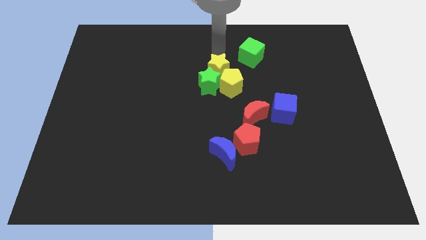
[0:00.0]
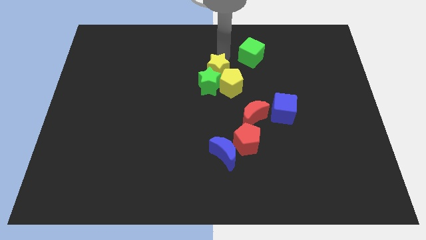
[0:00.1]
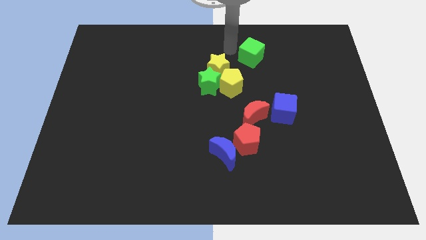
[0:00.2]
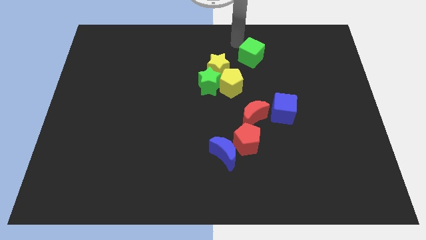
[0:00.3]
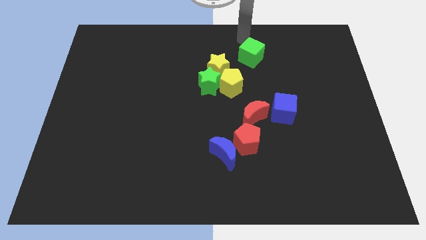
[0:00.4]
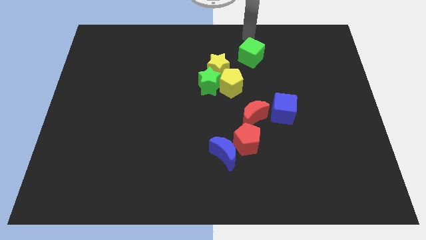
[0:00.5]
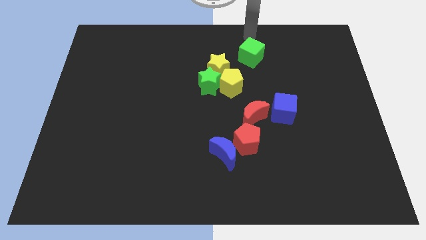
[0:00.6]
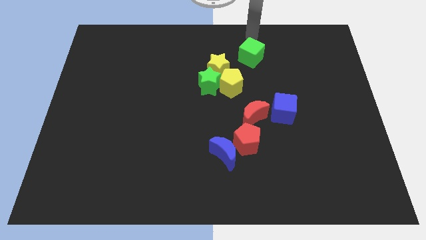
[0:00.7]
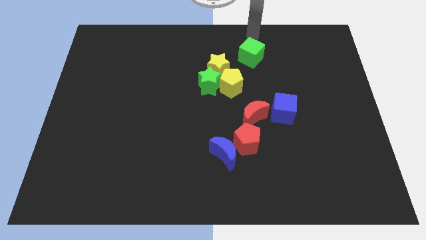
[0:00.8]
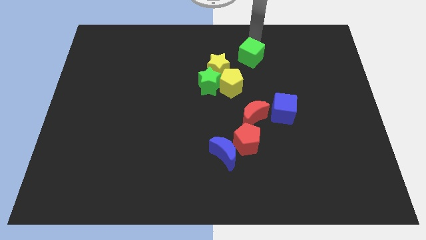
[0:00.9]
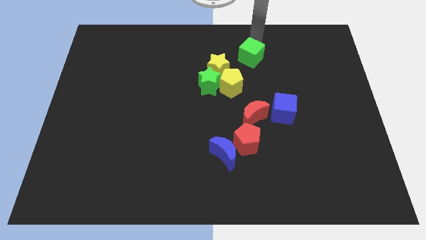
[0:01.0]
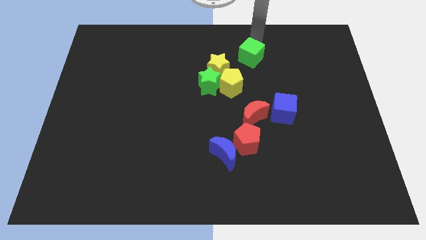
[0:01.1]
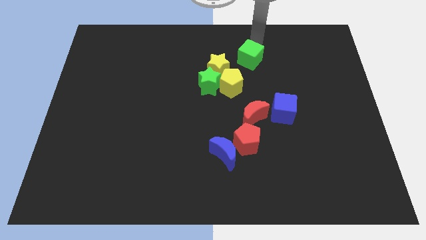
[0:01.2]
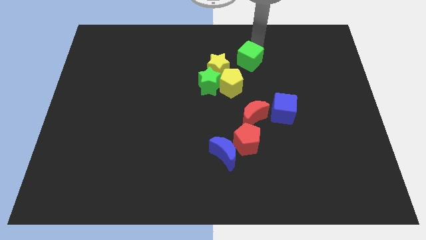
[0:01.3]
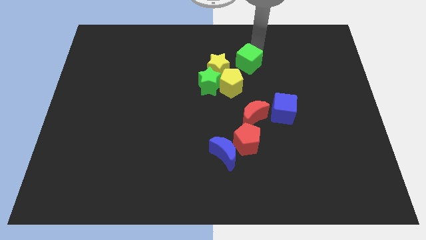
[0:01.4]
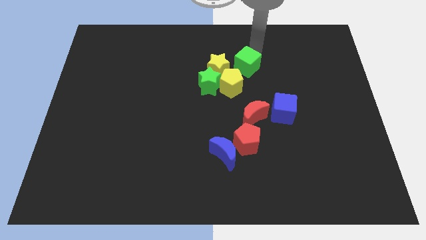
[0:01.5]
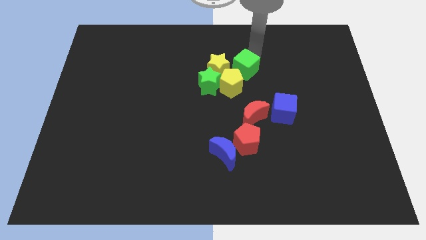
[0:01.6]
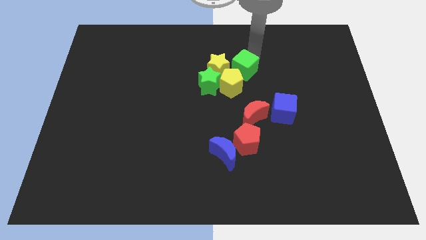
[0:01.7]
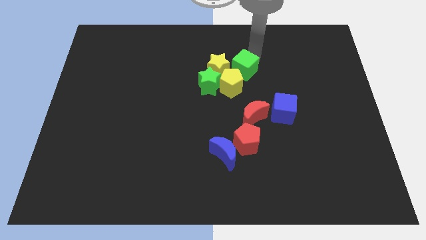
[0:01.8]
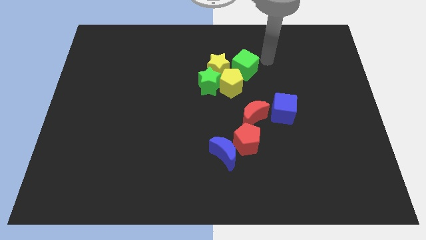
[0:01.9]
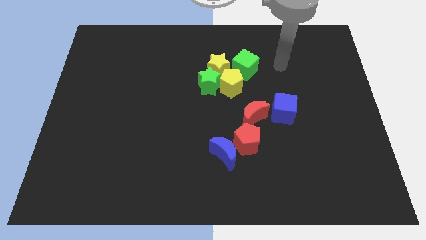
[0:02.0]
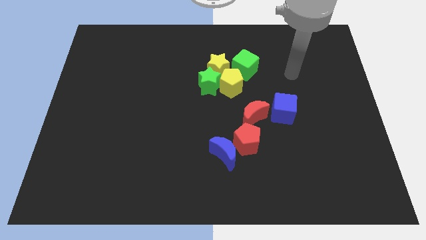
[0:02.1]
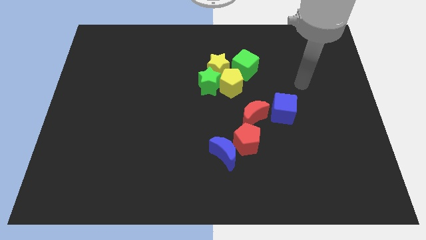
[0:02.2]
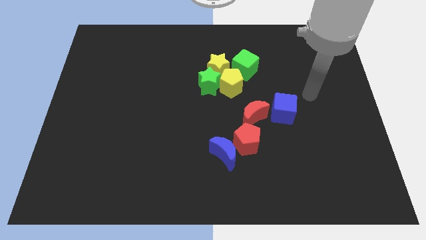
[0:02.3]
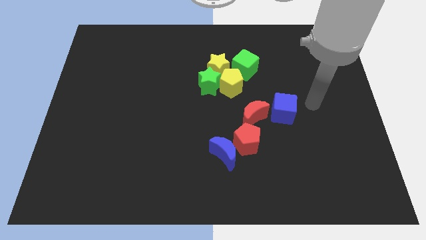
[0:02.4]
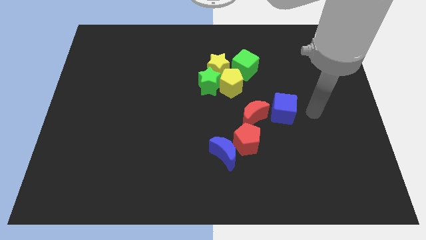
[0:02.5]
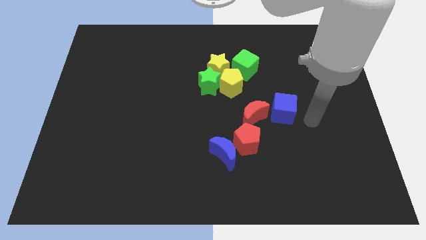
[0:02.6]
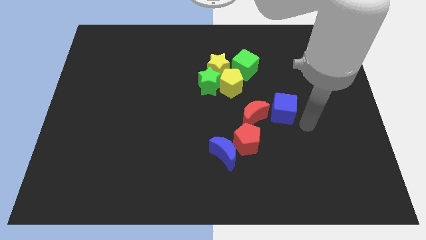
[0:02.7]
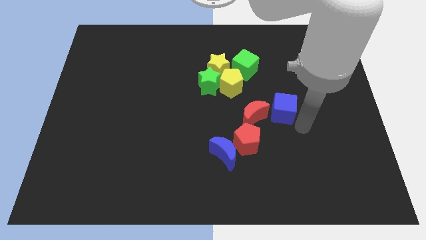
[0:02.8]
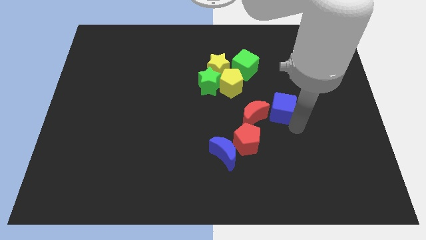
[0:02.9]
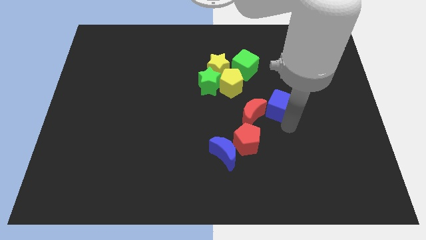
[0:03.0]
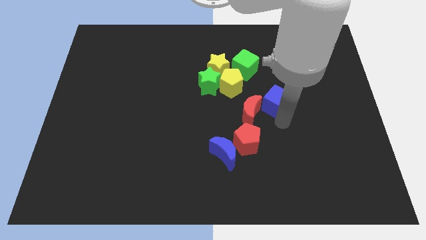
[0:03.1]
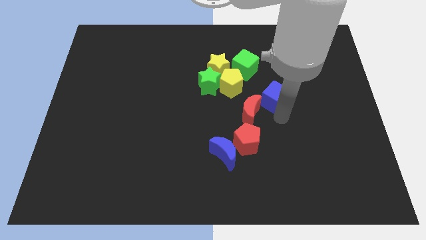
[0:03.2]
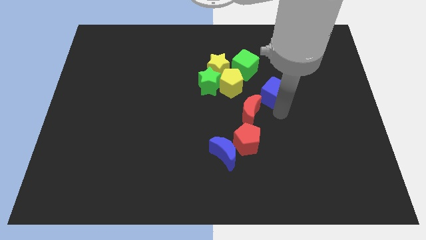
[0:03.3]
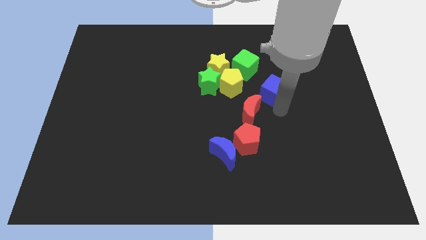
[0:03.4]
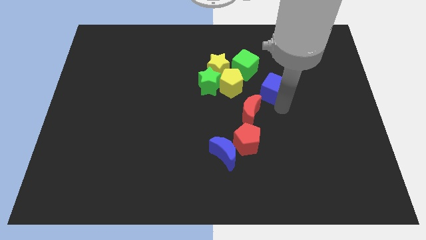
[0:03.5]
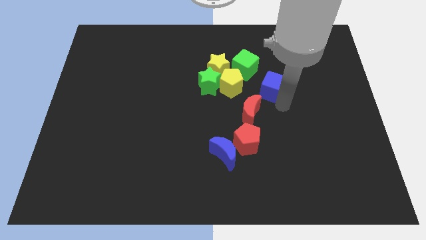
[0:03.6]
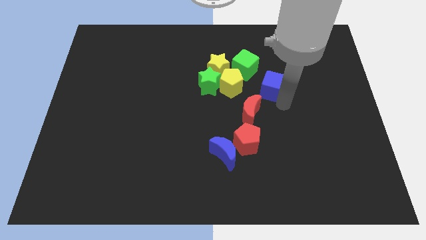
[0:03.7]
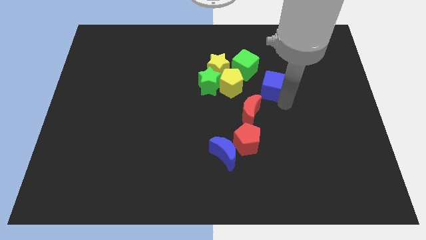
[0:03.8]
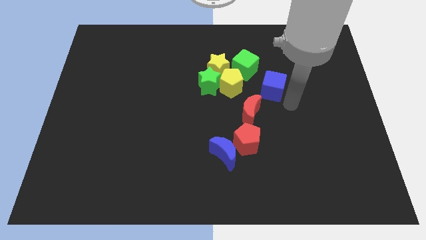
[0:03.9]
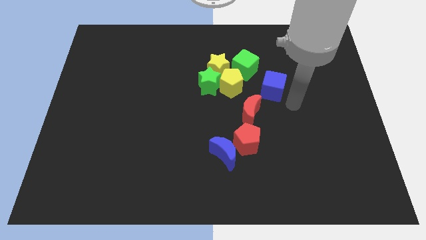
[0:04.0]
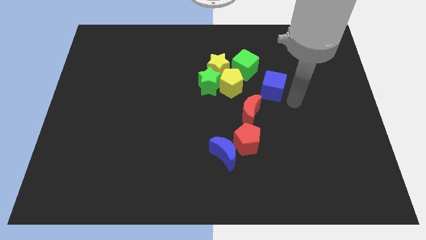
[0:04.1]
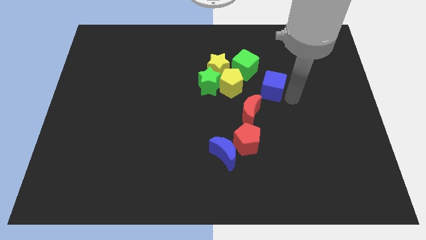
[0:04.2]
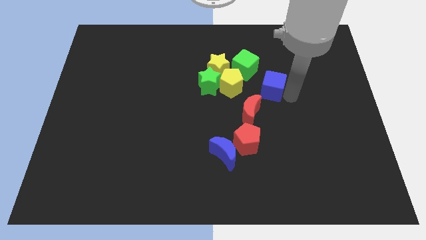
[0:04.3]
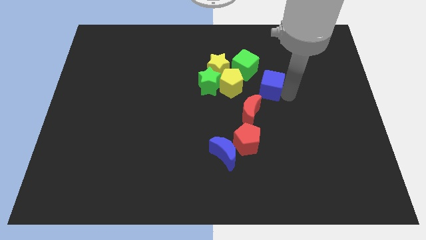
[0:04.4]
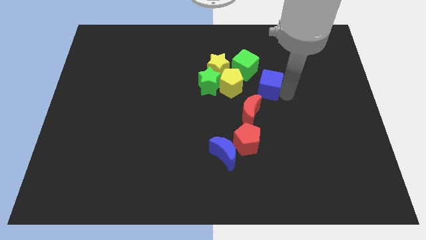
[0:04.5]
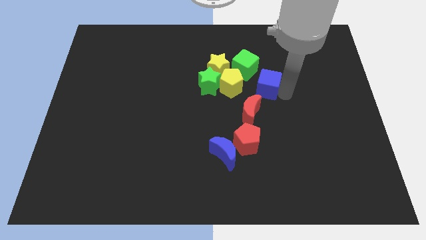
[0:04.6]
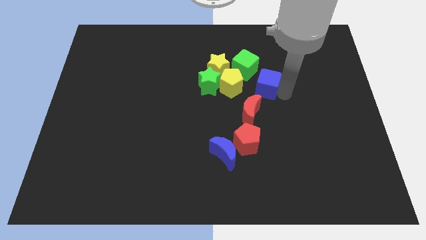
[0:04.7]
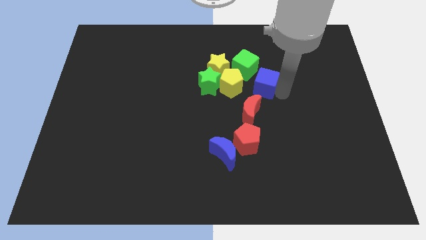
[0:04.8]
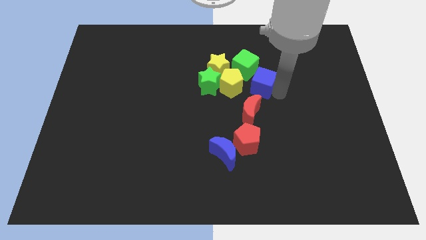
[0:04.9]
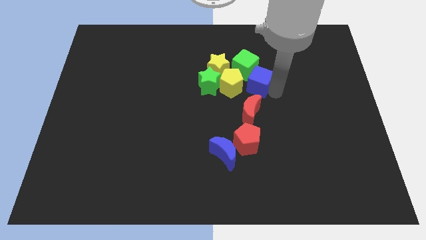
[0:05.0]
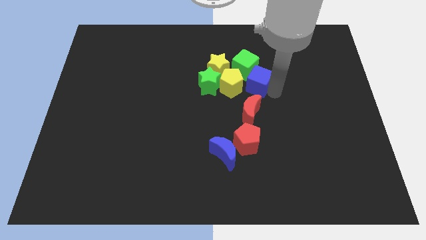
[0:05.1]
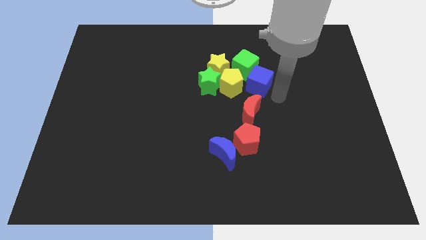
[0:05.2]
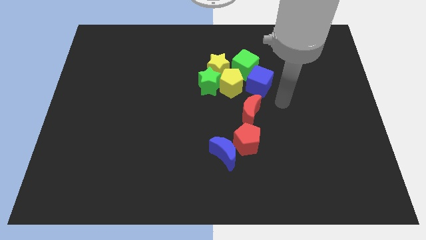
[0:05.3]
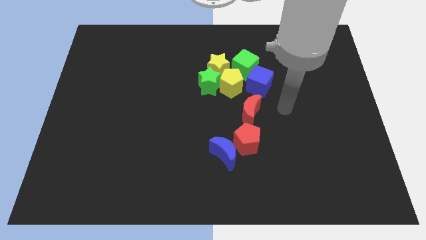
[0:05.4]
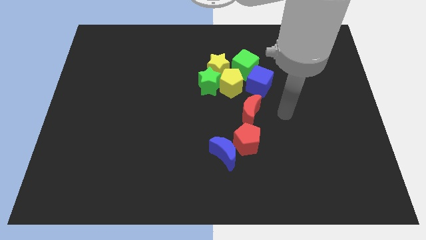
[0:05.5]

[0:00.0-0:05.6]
push the blue cube bottom of green cube

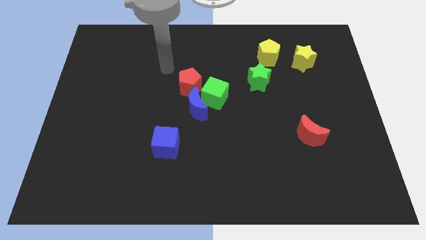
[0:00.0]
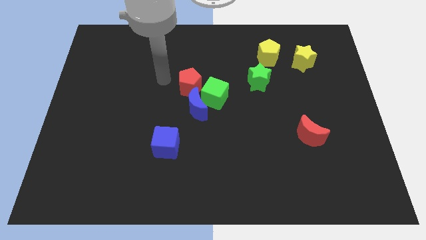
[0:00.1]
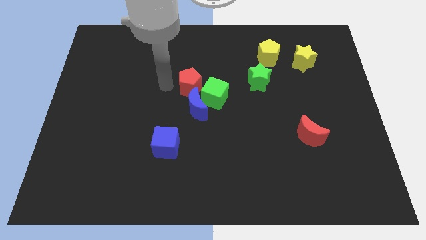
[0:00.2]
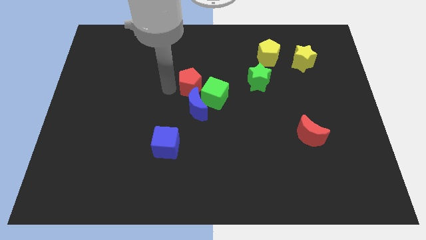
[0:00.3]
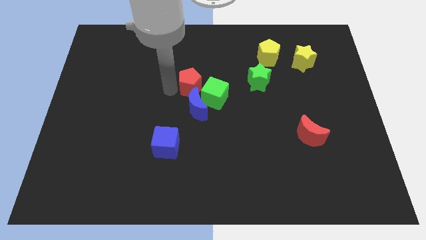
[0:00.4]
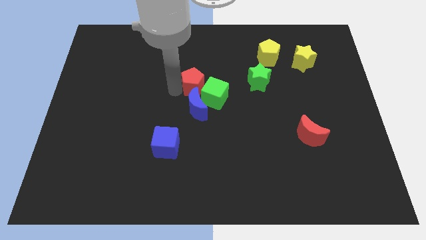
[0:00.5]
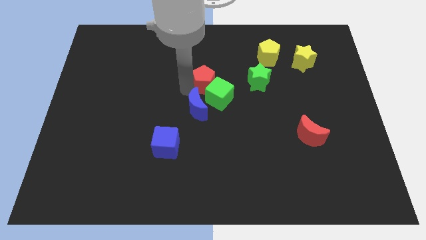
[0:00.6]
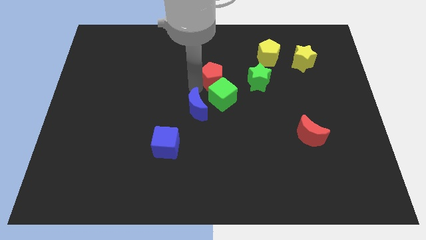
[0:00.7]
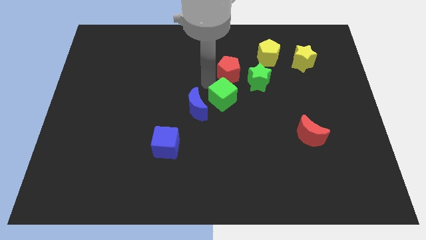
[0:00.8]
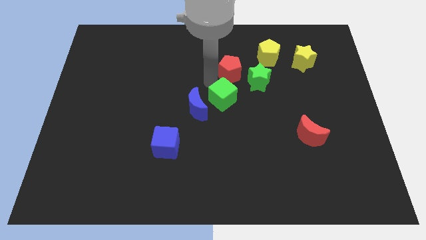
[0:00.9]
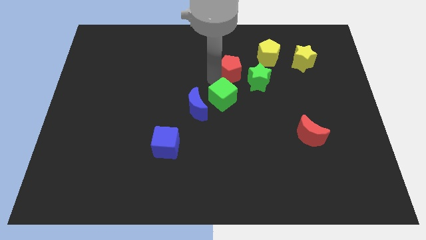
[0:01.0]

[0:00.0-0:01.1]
move the red pentagon at the top of the green cube

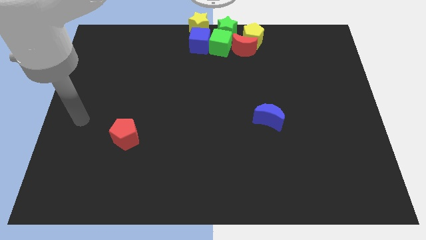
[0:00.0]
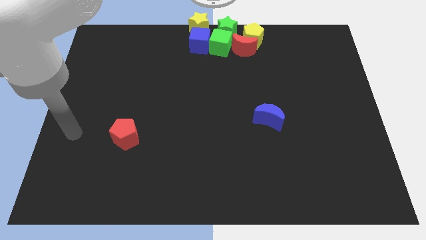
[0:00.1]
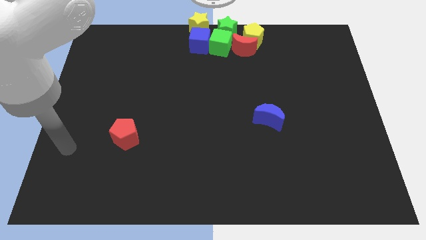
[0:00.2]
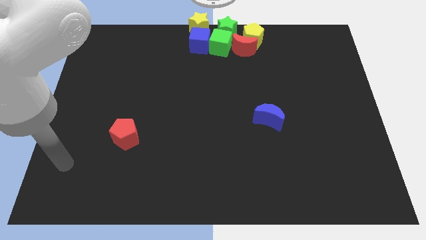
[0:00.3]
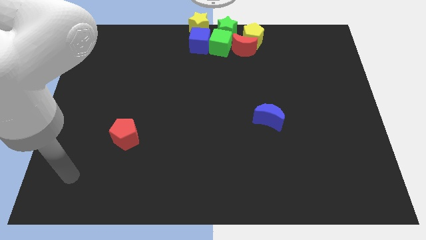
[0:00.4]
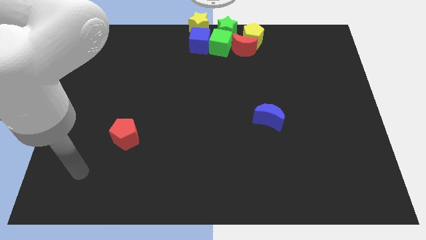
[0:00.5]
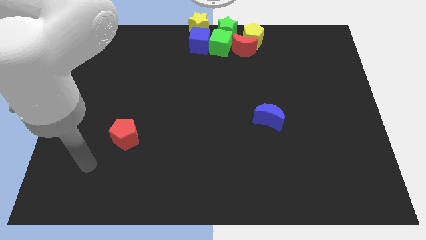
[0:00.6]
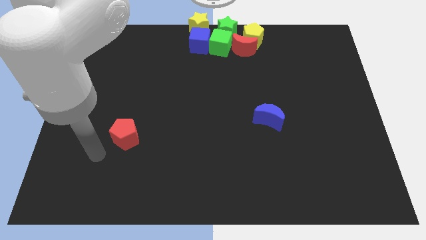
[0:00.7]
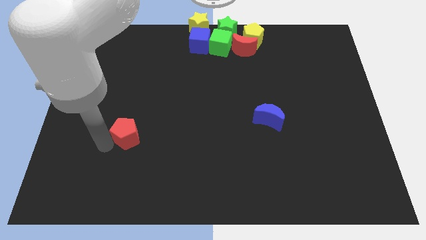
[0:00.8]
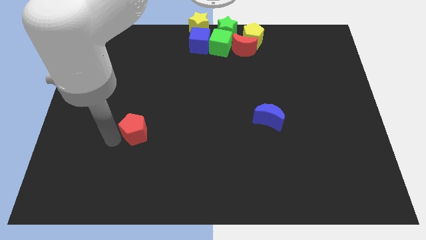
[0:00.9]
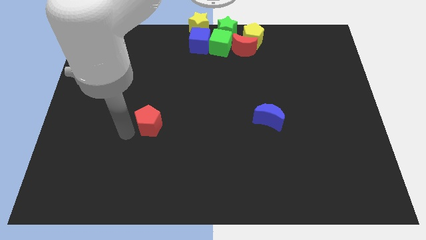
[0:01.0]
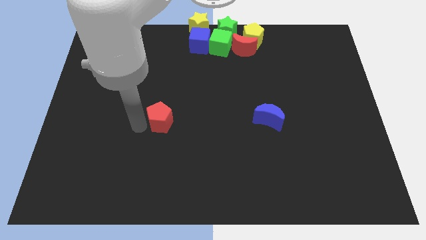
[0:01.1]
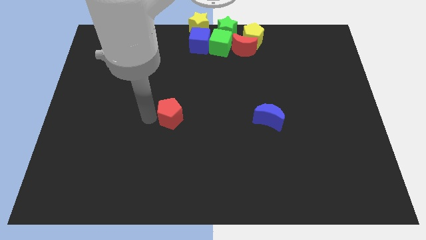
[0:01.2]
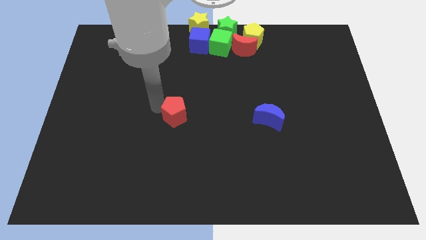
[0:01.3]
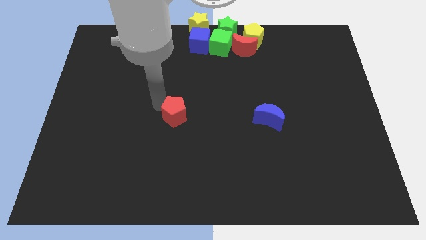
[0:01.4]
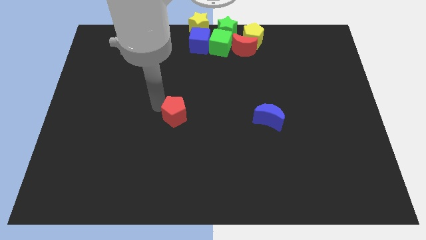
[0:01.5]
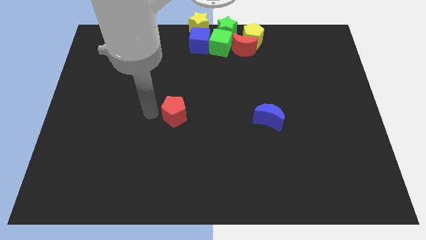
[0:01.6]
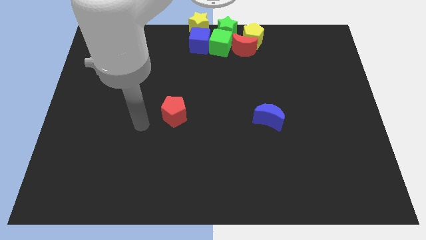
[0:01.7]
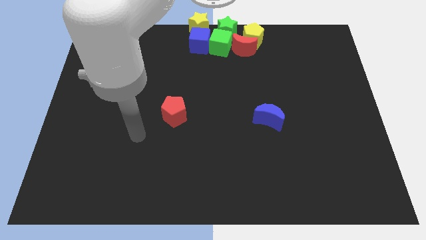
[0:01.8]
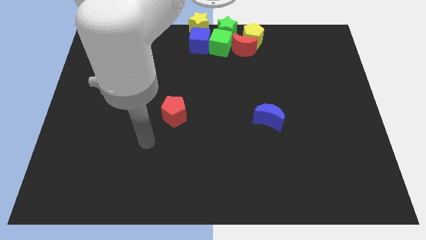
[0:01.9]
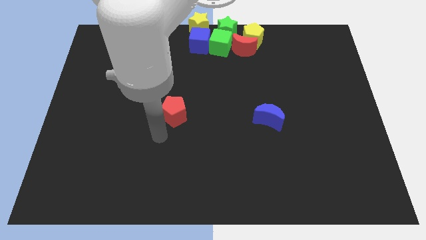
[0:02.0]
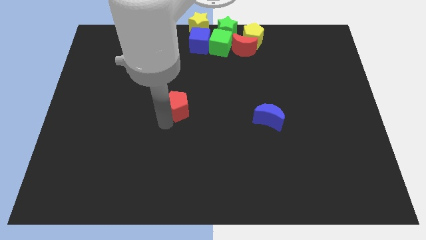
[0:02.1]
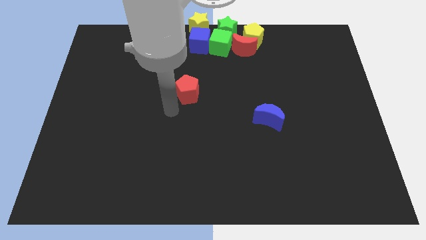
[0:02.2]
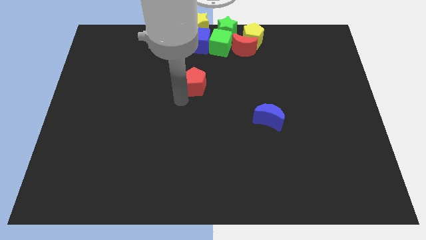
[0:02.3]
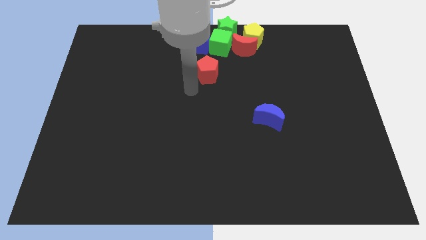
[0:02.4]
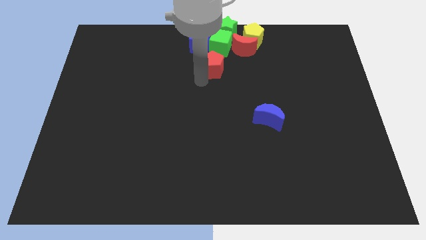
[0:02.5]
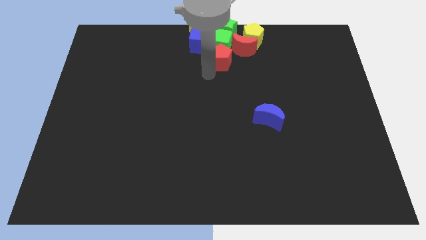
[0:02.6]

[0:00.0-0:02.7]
place red pentagon to the bottom of green cube
